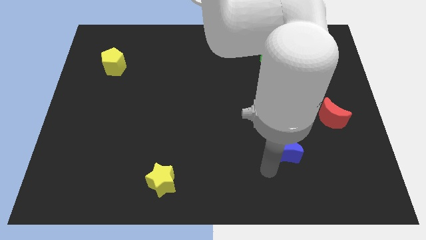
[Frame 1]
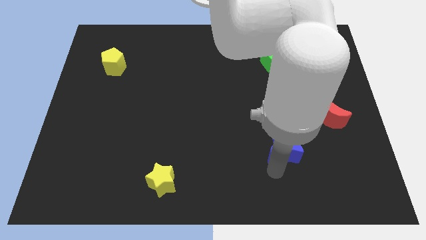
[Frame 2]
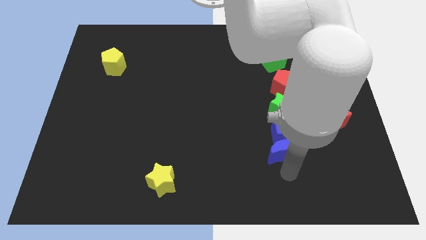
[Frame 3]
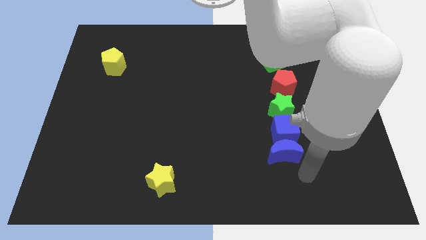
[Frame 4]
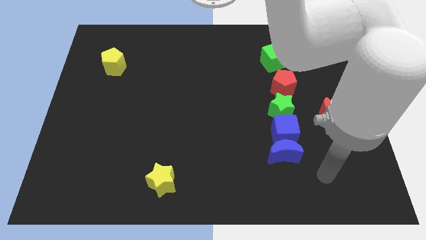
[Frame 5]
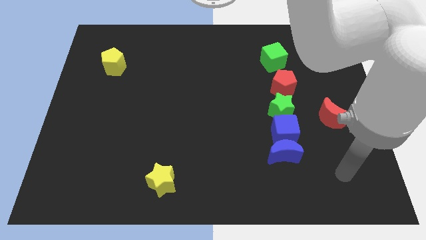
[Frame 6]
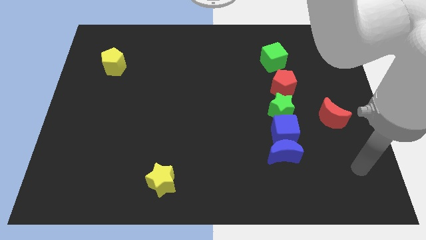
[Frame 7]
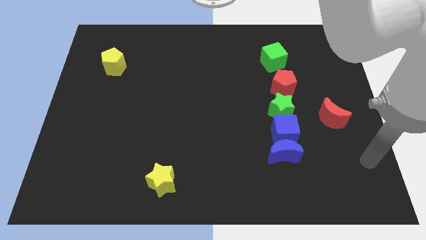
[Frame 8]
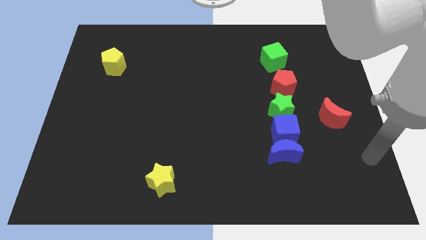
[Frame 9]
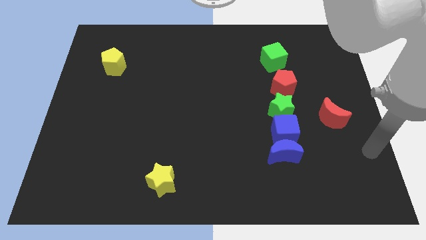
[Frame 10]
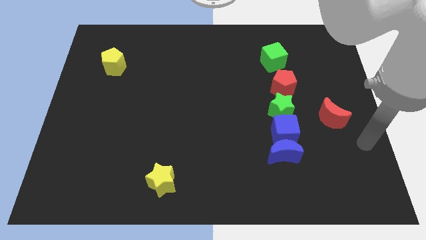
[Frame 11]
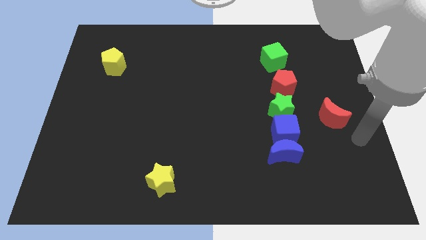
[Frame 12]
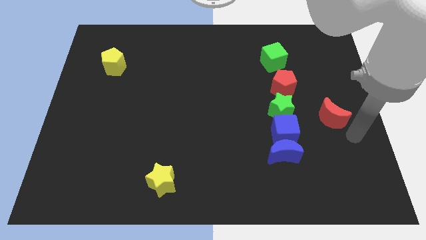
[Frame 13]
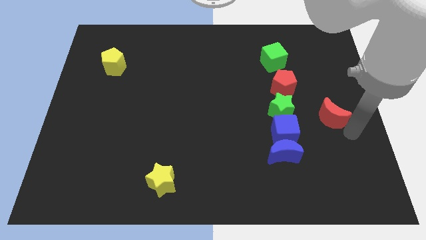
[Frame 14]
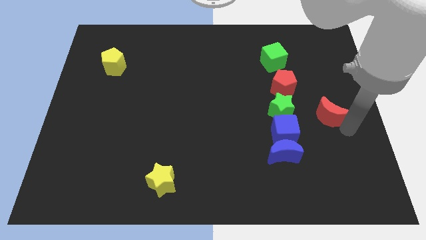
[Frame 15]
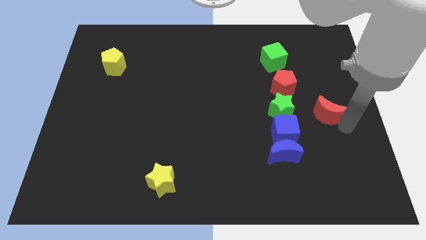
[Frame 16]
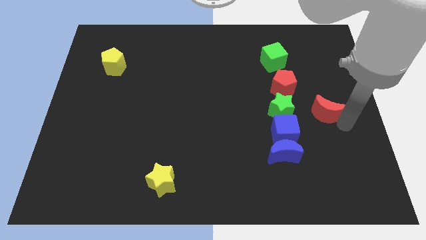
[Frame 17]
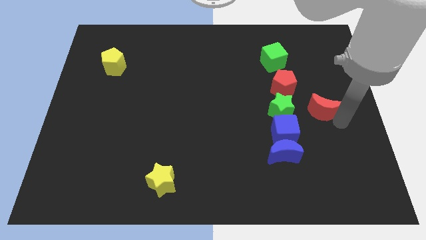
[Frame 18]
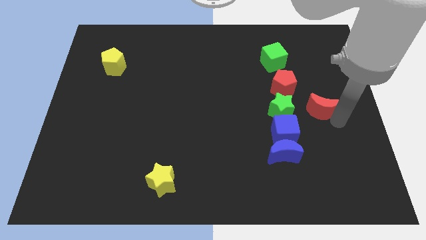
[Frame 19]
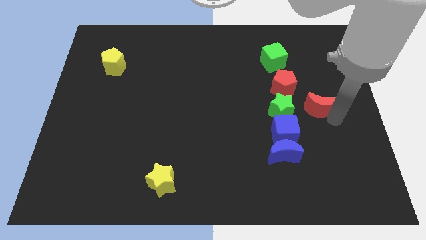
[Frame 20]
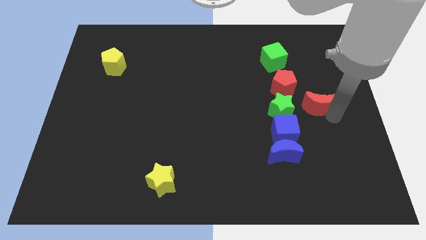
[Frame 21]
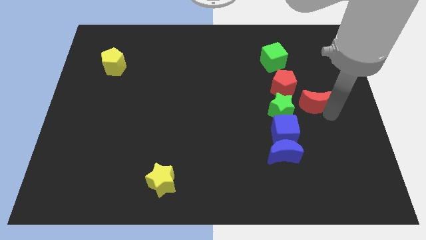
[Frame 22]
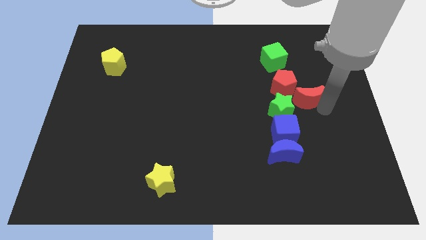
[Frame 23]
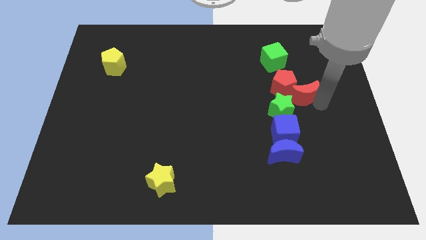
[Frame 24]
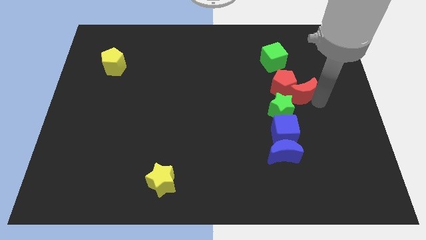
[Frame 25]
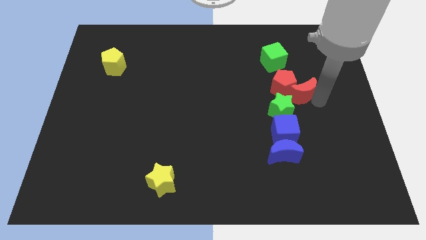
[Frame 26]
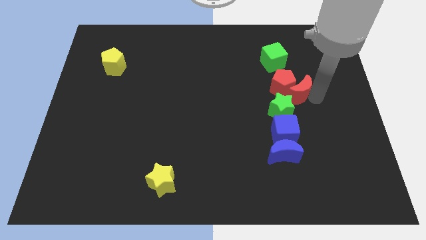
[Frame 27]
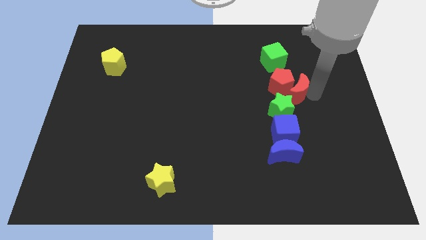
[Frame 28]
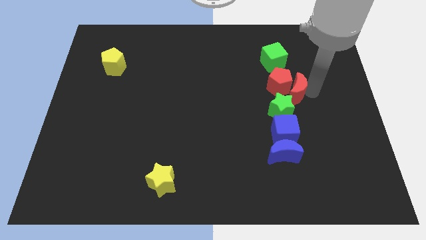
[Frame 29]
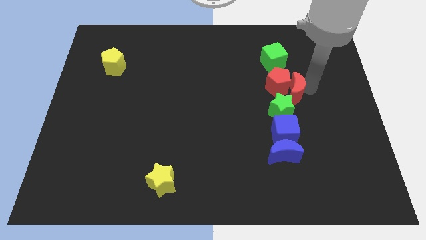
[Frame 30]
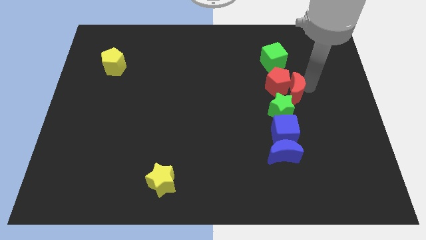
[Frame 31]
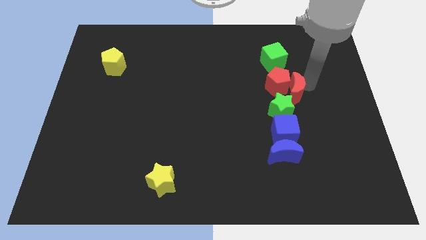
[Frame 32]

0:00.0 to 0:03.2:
push the red moon into the right side of the red pentagon

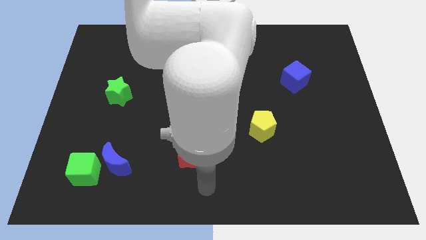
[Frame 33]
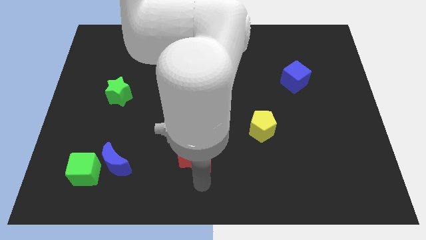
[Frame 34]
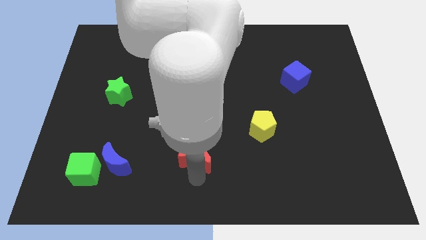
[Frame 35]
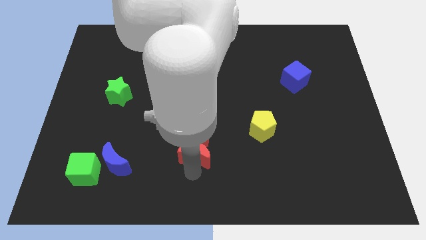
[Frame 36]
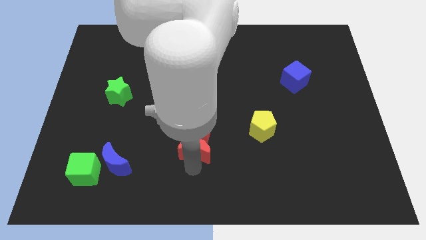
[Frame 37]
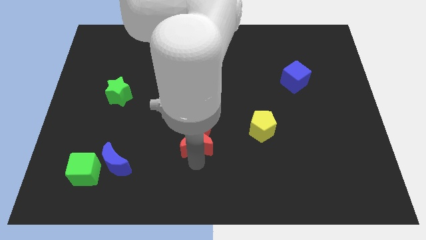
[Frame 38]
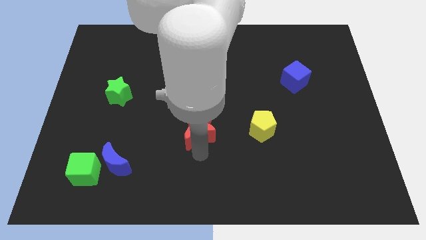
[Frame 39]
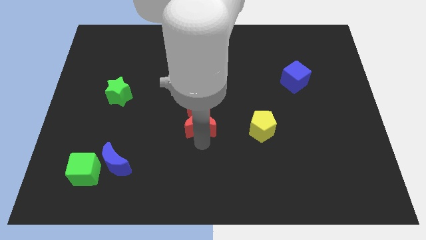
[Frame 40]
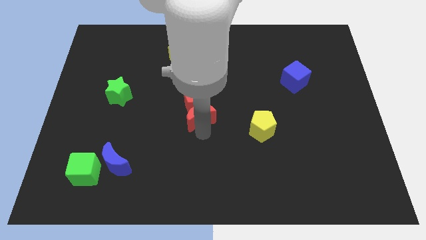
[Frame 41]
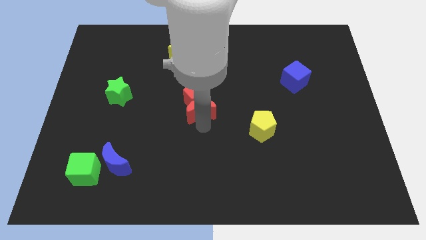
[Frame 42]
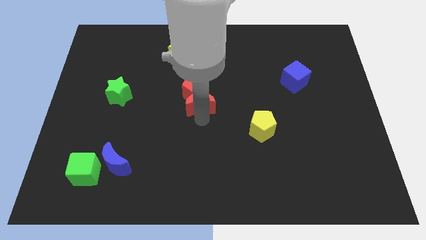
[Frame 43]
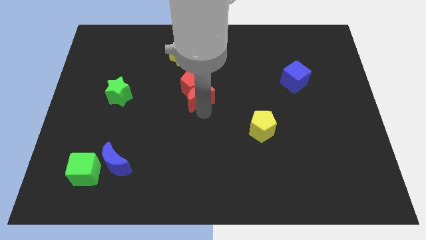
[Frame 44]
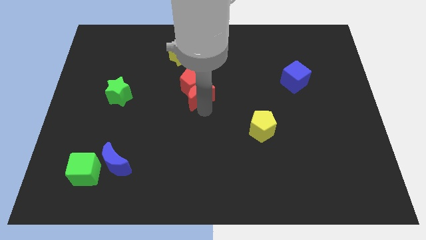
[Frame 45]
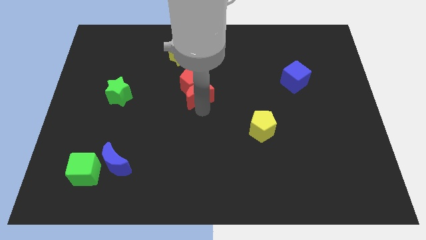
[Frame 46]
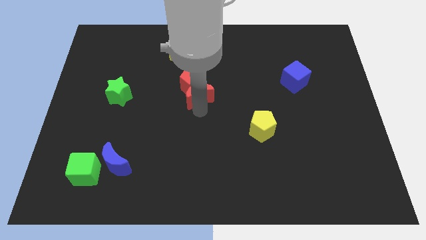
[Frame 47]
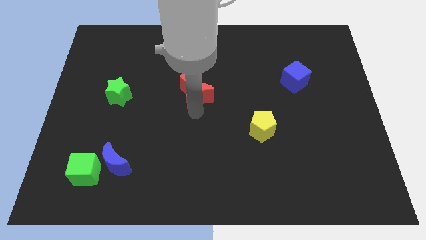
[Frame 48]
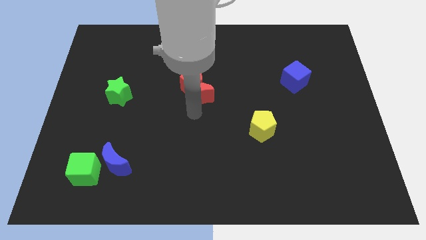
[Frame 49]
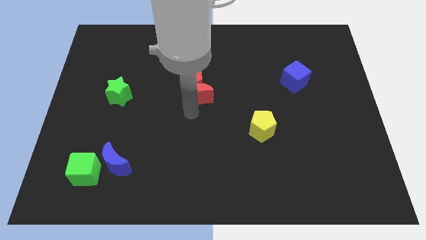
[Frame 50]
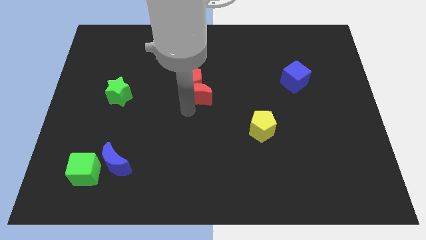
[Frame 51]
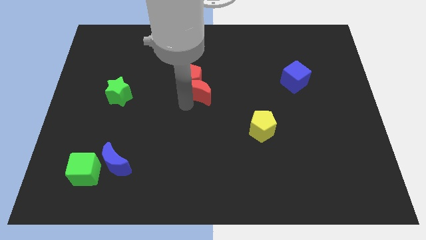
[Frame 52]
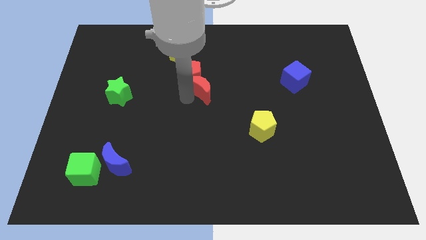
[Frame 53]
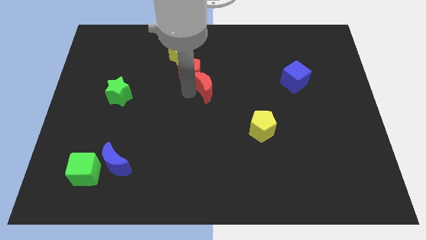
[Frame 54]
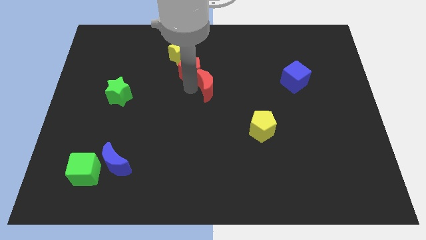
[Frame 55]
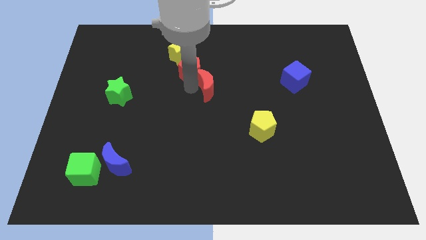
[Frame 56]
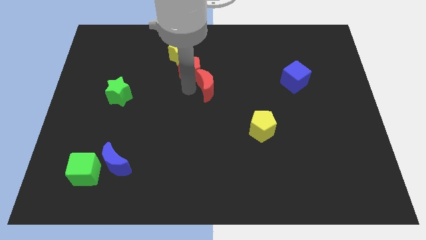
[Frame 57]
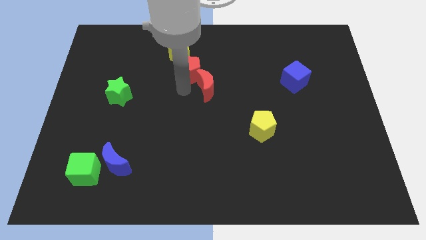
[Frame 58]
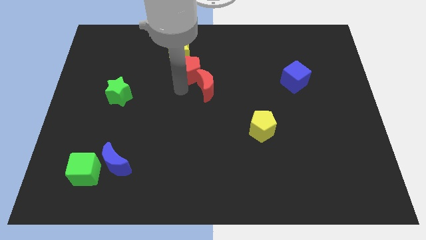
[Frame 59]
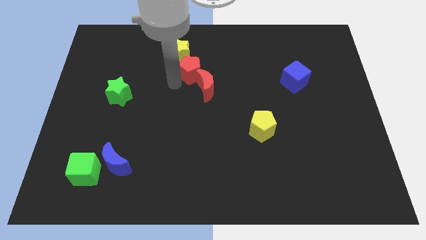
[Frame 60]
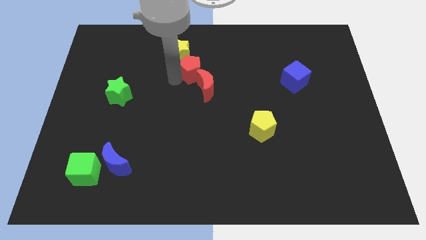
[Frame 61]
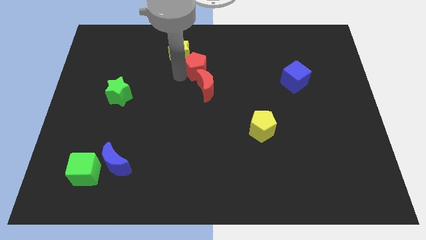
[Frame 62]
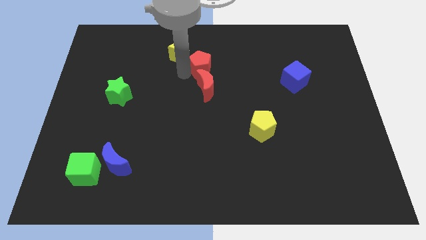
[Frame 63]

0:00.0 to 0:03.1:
slide red blocks towards yellow star

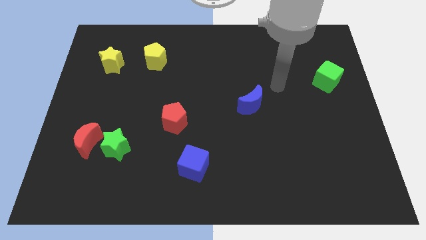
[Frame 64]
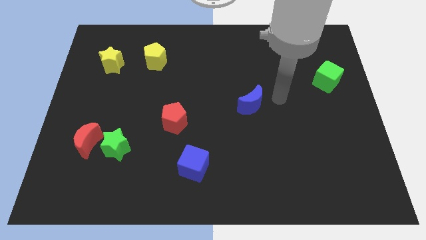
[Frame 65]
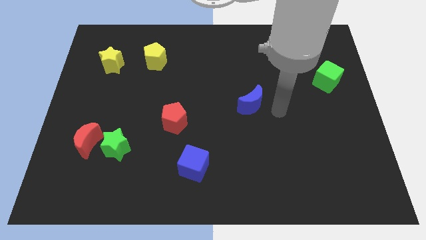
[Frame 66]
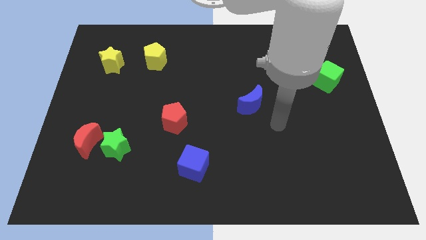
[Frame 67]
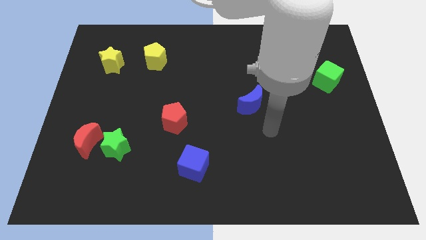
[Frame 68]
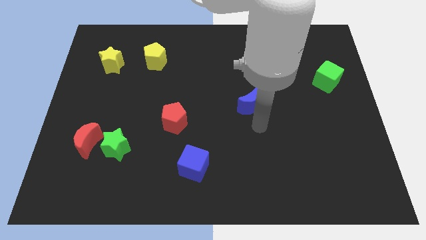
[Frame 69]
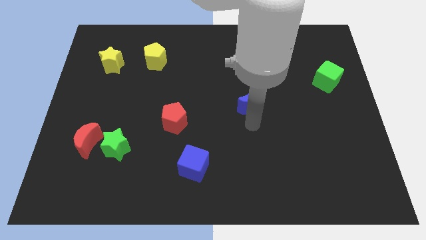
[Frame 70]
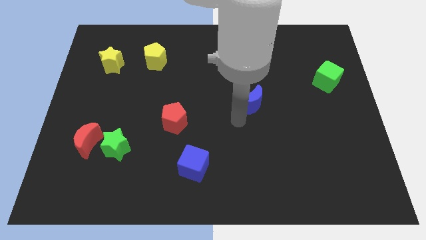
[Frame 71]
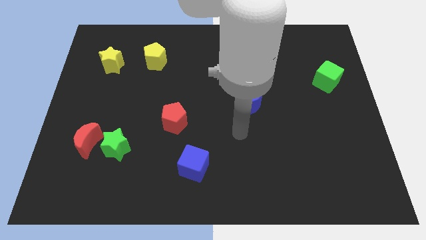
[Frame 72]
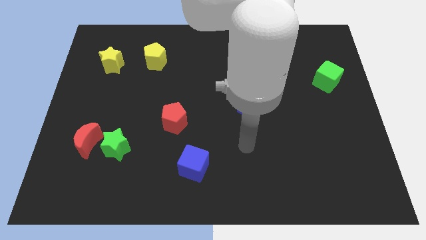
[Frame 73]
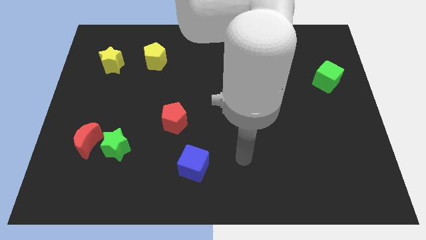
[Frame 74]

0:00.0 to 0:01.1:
move the arm down to the blue moon

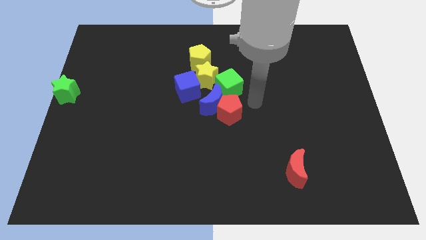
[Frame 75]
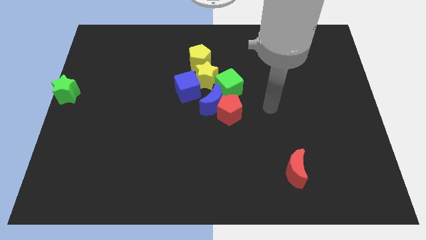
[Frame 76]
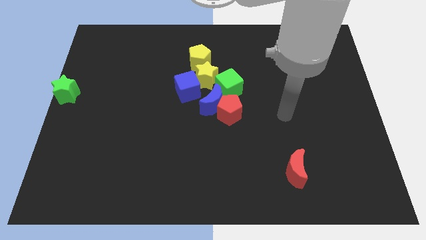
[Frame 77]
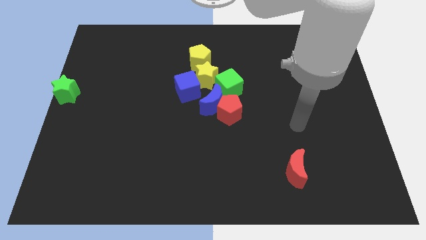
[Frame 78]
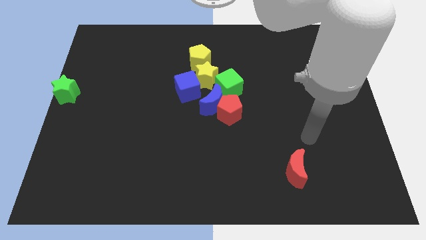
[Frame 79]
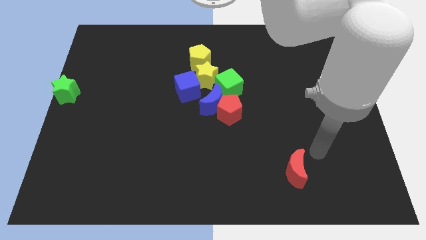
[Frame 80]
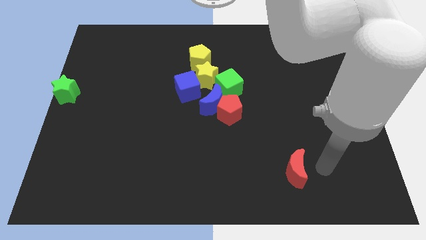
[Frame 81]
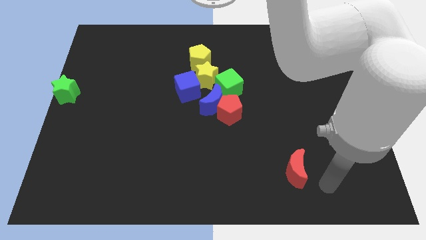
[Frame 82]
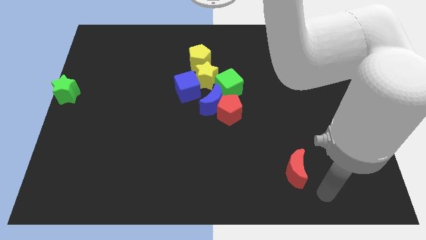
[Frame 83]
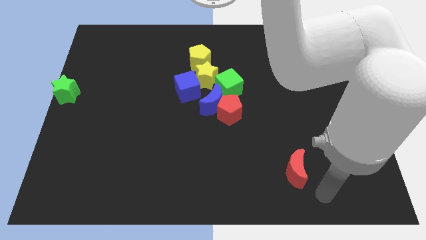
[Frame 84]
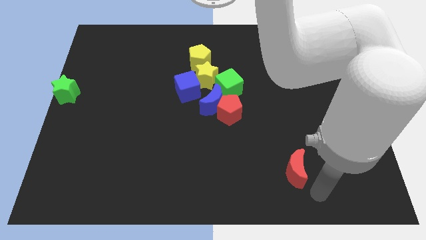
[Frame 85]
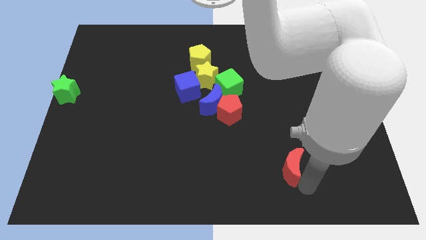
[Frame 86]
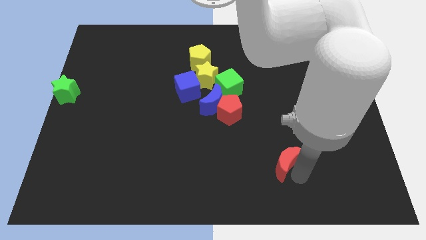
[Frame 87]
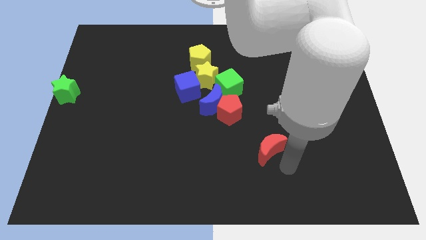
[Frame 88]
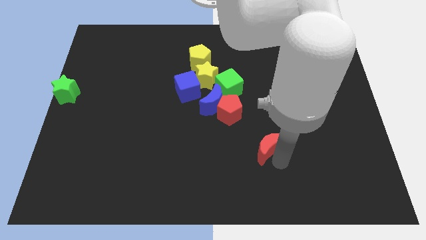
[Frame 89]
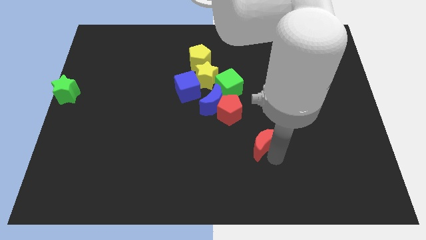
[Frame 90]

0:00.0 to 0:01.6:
place the red crescent diagonally on the bottom right side of the red pentagon

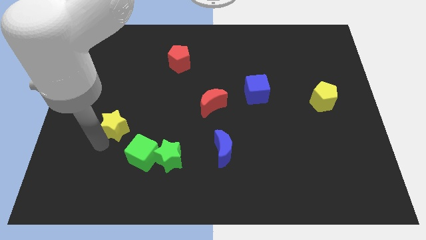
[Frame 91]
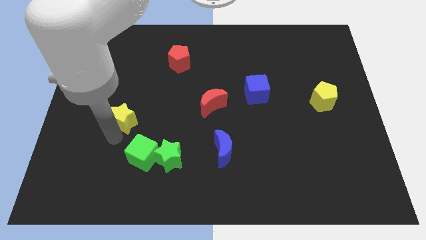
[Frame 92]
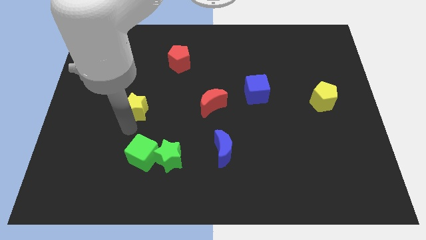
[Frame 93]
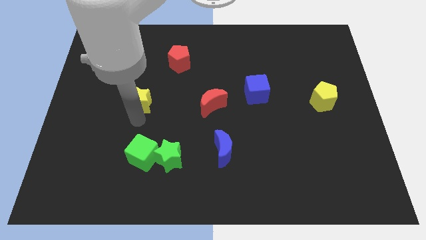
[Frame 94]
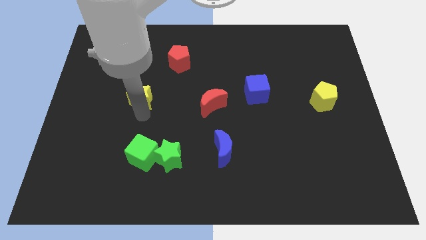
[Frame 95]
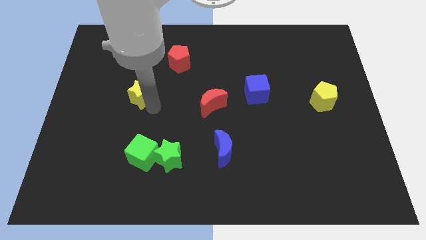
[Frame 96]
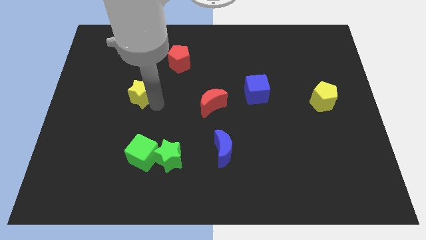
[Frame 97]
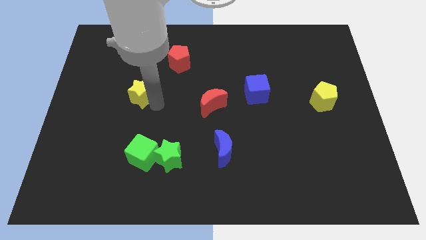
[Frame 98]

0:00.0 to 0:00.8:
push yellow star slightly upwards
